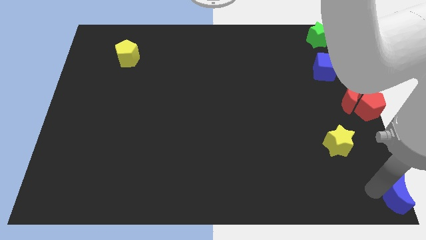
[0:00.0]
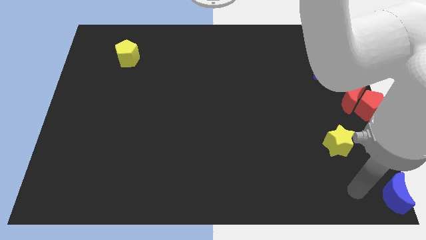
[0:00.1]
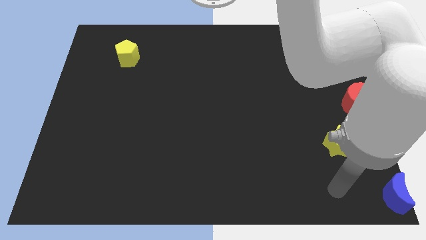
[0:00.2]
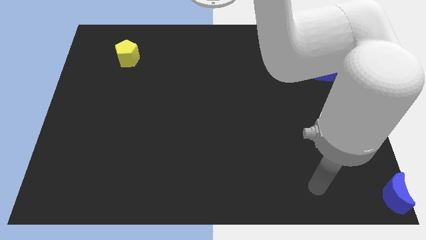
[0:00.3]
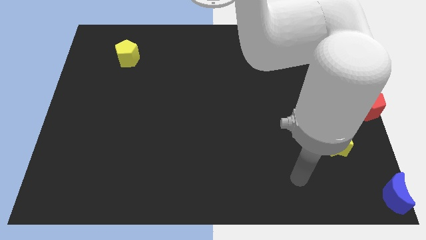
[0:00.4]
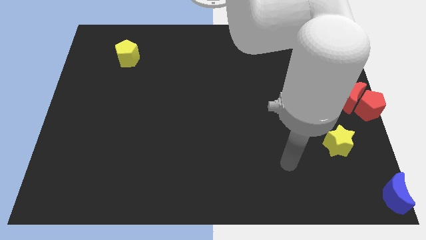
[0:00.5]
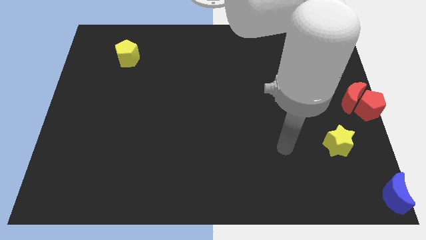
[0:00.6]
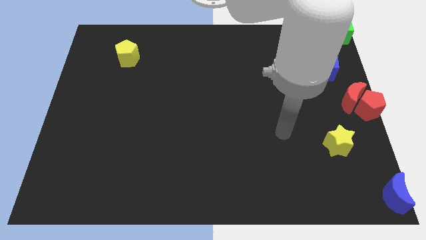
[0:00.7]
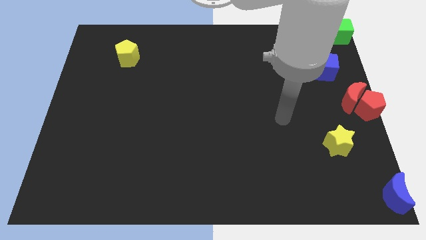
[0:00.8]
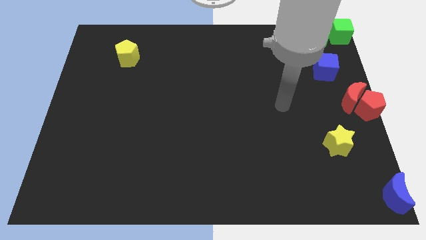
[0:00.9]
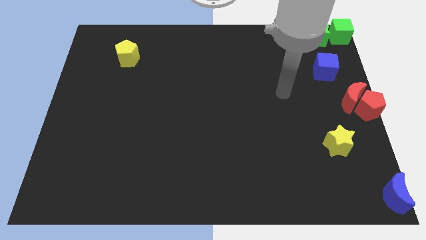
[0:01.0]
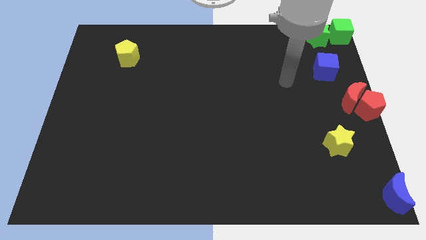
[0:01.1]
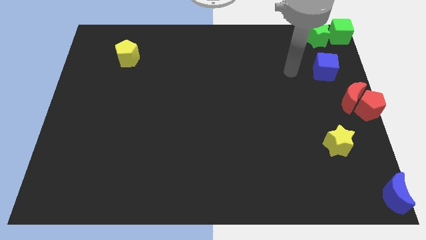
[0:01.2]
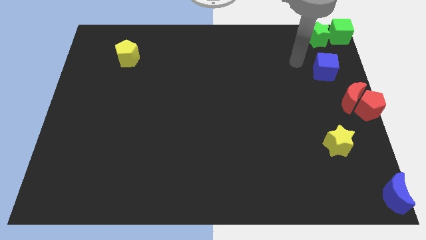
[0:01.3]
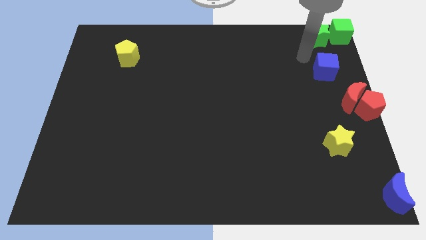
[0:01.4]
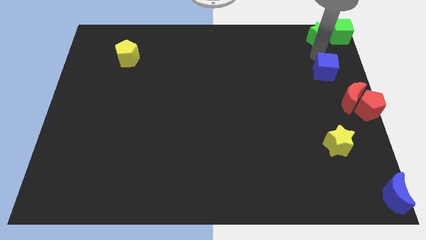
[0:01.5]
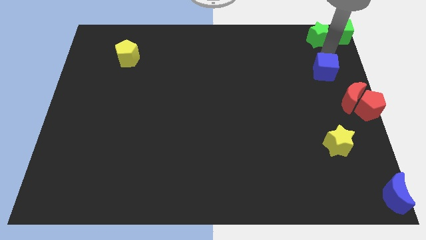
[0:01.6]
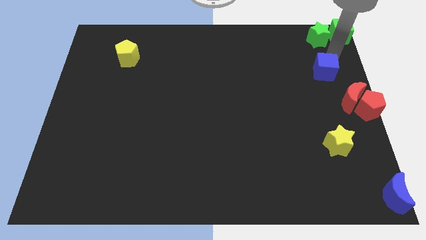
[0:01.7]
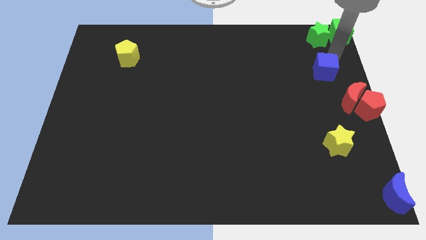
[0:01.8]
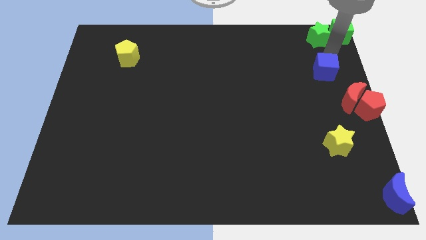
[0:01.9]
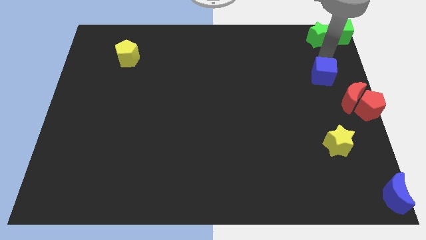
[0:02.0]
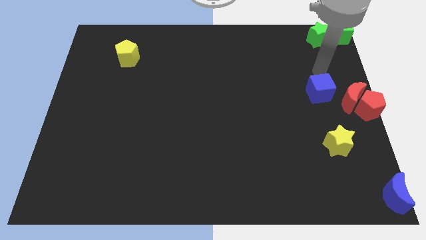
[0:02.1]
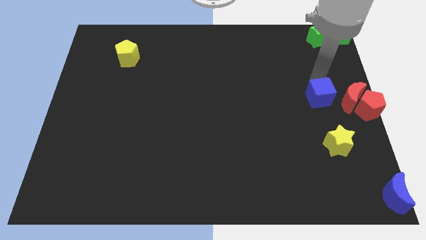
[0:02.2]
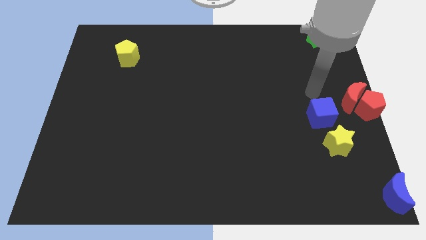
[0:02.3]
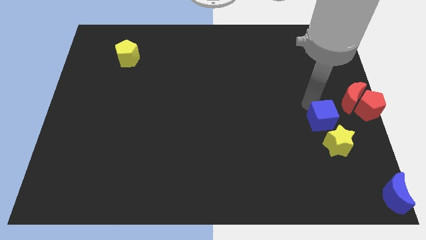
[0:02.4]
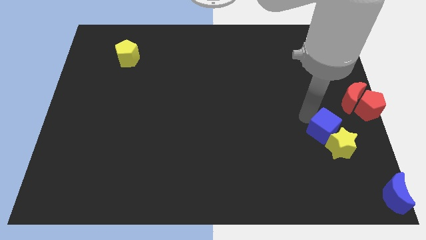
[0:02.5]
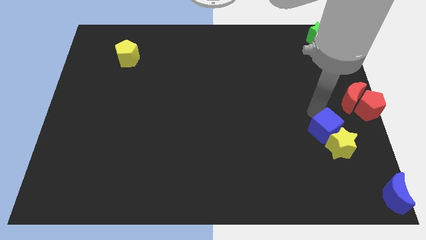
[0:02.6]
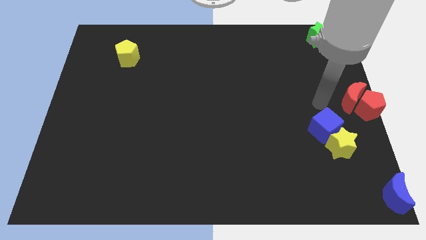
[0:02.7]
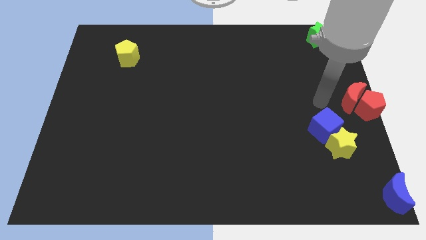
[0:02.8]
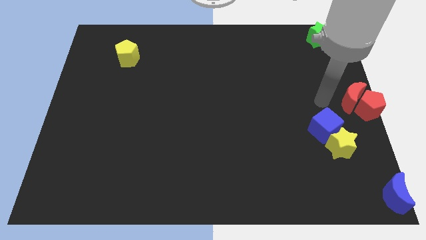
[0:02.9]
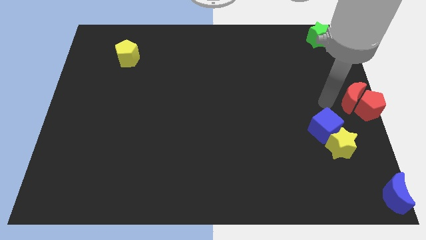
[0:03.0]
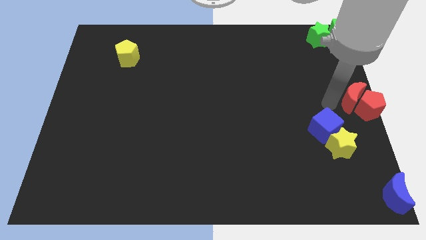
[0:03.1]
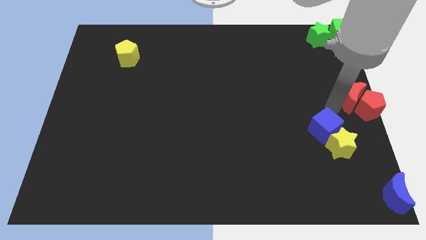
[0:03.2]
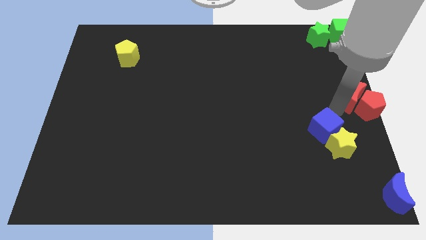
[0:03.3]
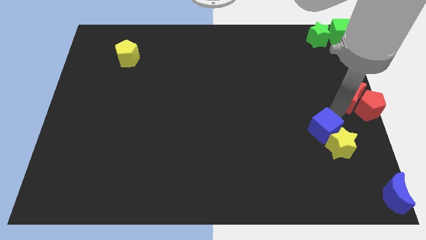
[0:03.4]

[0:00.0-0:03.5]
move the blue cube into the yellow star

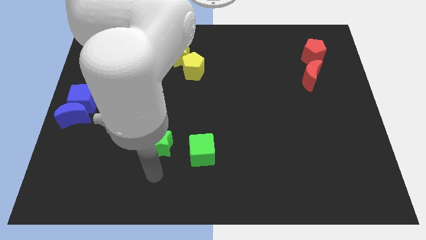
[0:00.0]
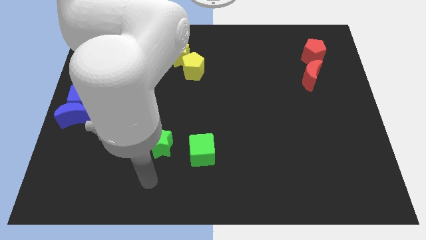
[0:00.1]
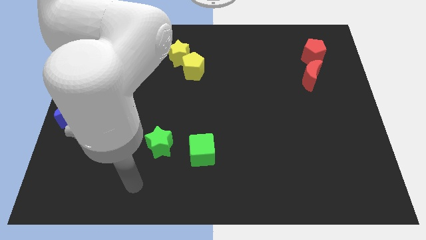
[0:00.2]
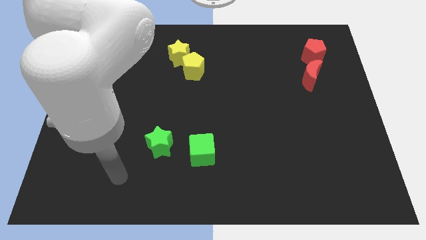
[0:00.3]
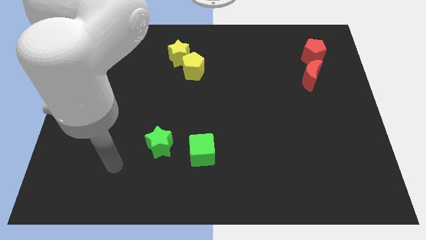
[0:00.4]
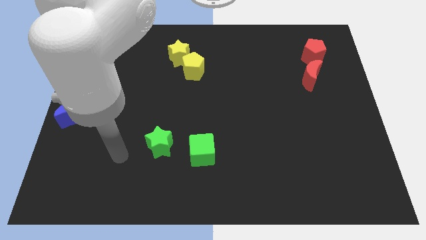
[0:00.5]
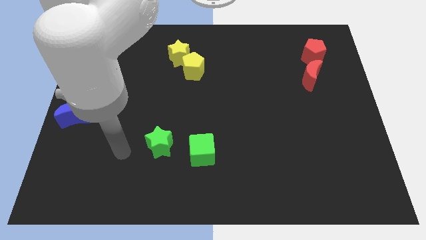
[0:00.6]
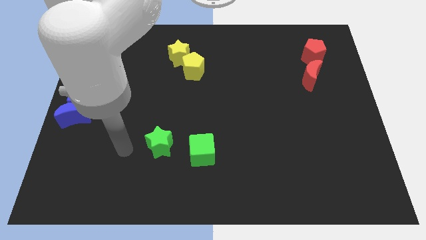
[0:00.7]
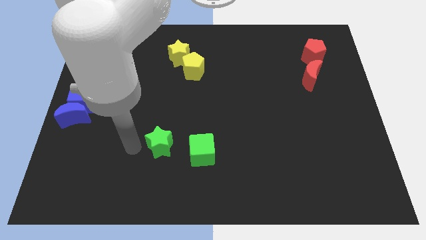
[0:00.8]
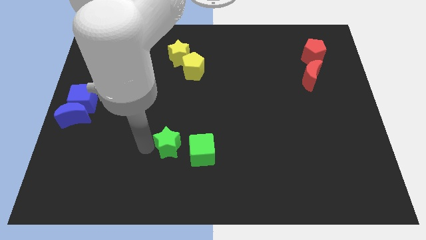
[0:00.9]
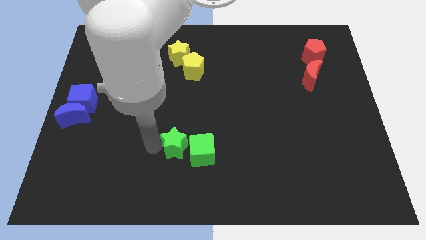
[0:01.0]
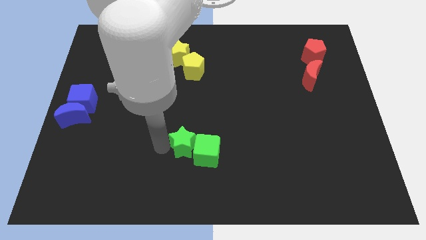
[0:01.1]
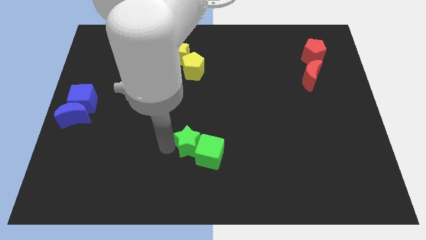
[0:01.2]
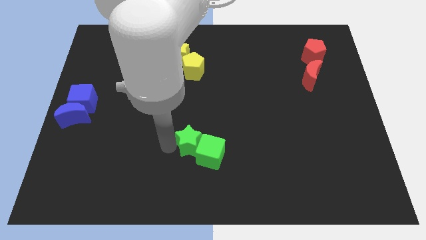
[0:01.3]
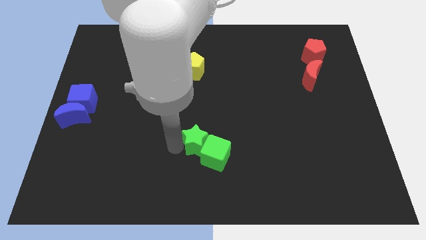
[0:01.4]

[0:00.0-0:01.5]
push green star into green cube

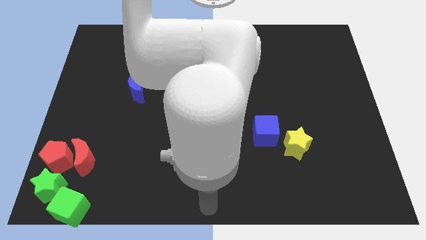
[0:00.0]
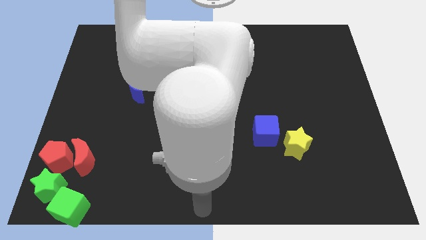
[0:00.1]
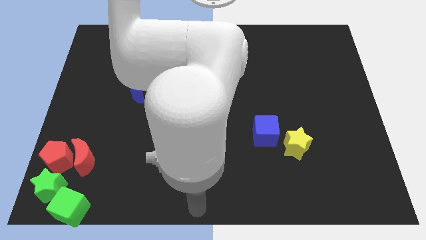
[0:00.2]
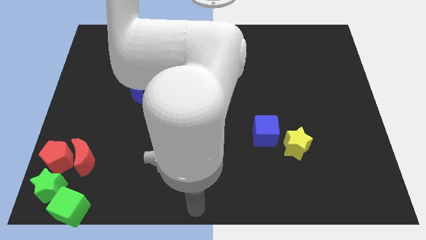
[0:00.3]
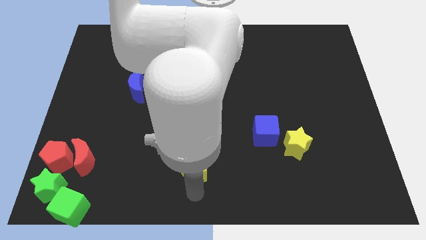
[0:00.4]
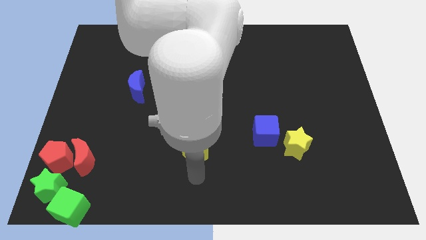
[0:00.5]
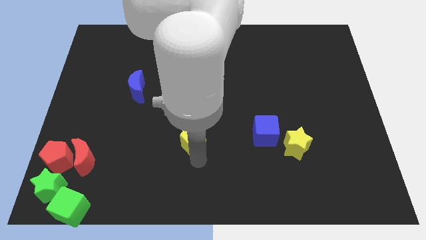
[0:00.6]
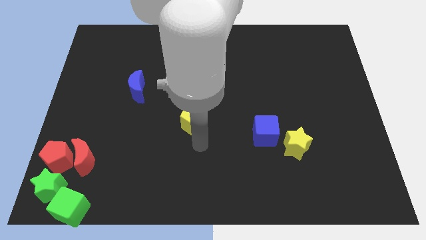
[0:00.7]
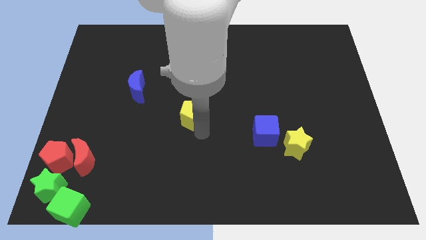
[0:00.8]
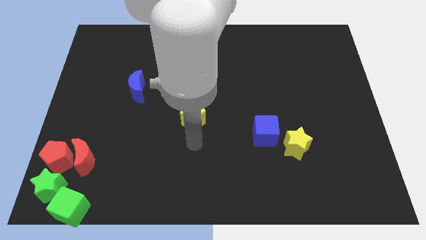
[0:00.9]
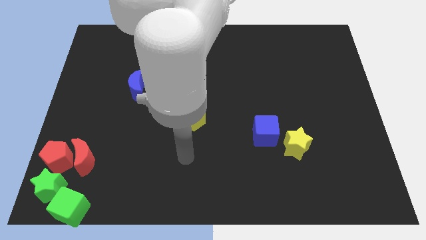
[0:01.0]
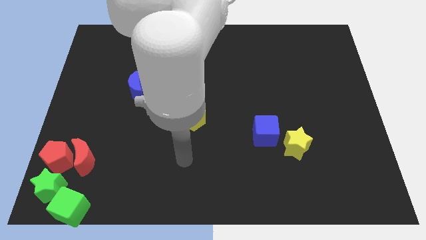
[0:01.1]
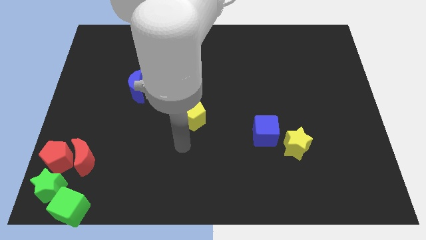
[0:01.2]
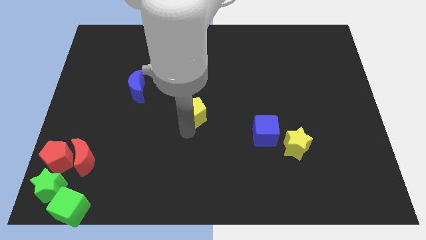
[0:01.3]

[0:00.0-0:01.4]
push the yellow pentagon to the center

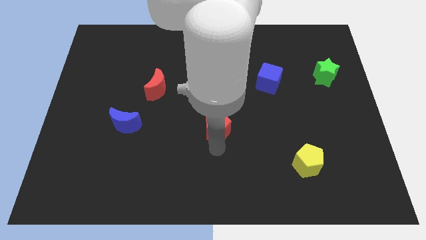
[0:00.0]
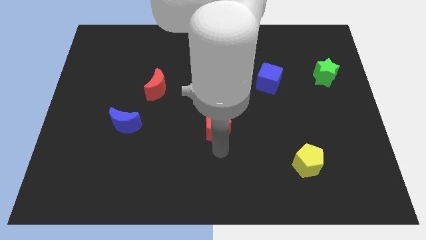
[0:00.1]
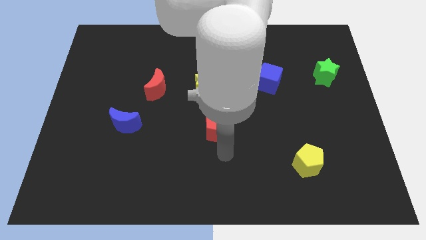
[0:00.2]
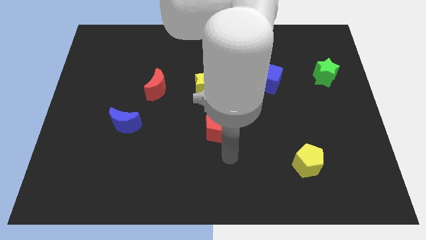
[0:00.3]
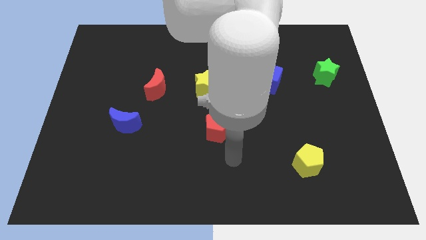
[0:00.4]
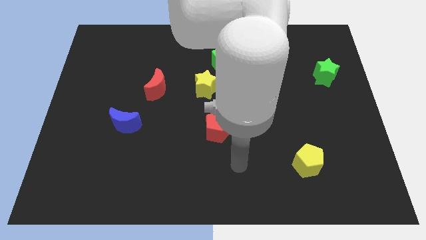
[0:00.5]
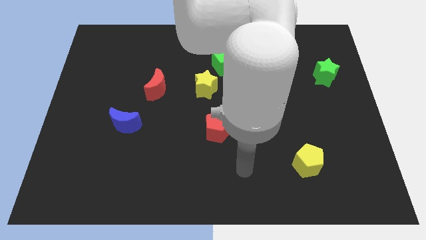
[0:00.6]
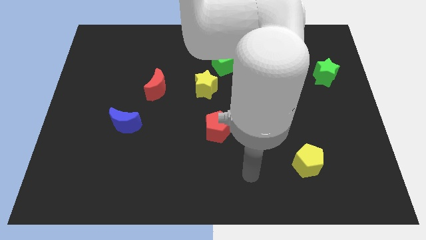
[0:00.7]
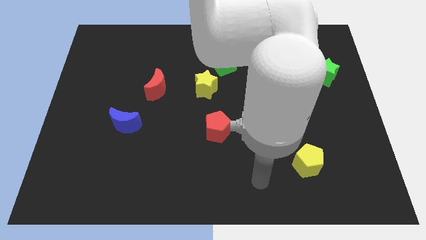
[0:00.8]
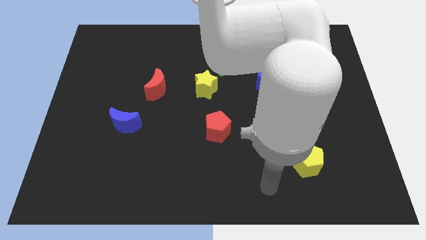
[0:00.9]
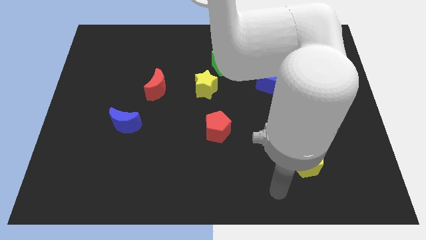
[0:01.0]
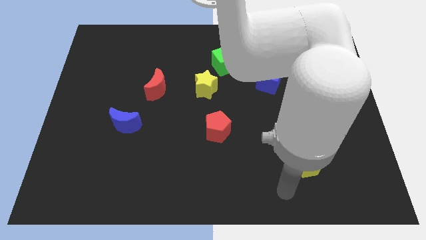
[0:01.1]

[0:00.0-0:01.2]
move the arm away from the red pentagon

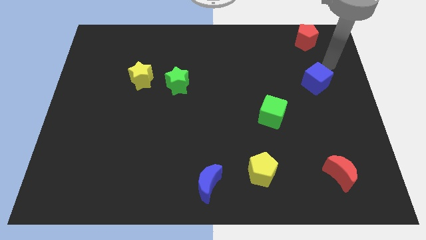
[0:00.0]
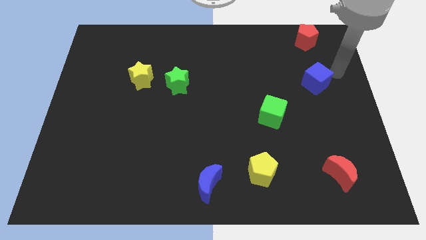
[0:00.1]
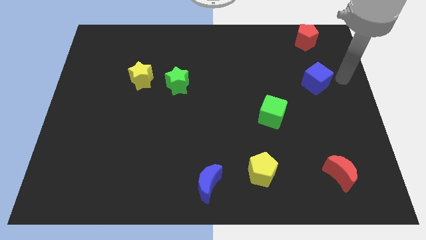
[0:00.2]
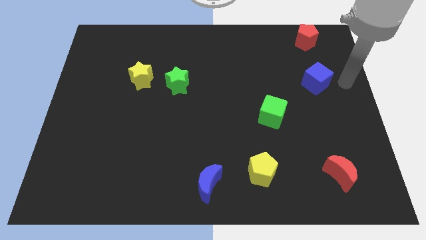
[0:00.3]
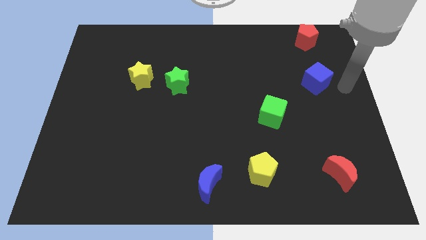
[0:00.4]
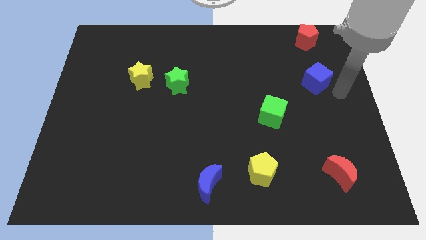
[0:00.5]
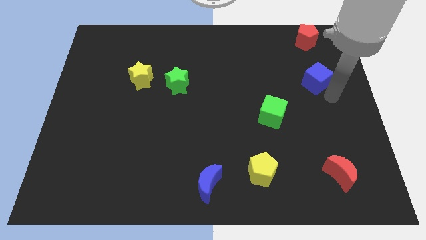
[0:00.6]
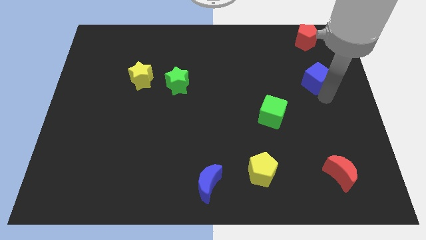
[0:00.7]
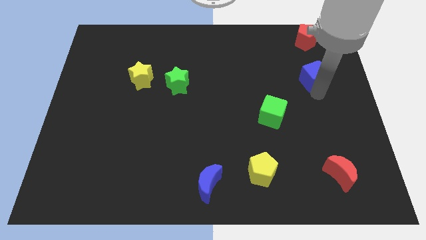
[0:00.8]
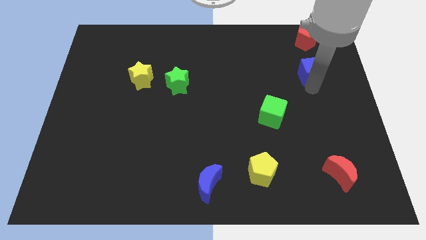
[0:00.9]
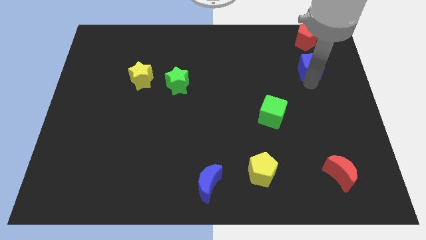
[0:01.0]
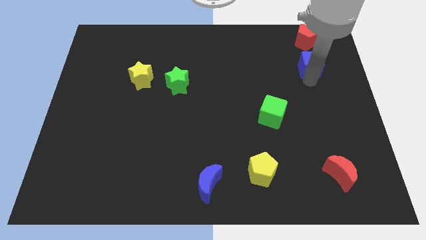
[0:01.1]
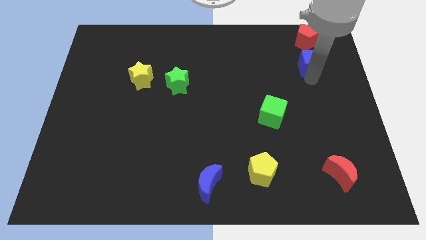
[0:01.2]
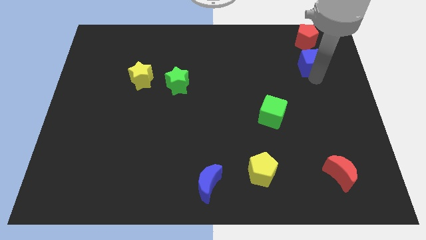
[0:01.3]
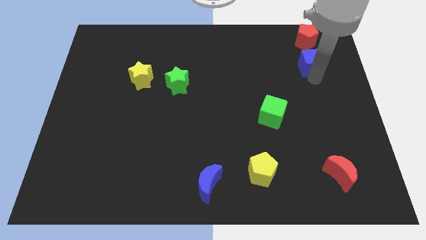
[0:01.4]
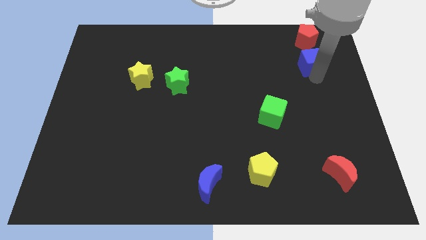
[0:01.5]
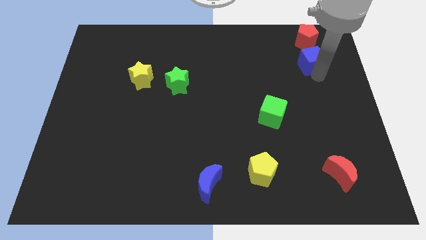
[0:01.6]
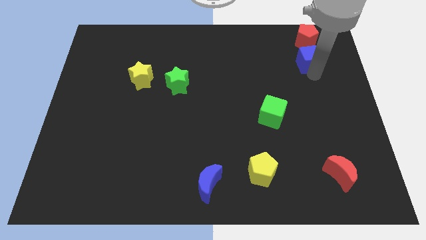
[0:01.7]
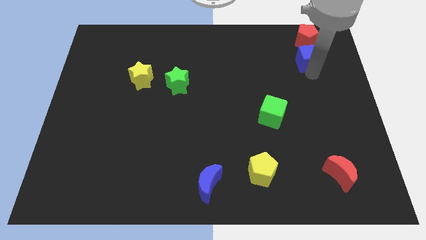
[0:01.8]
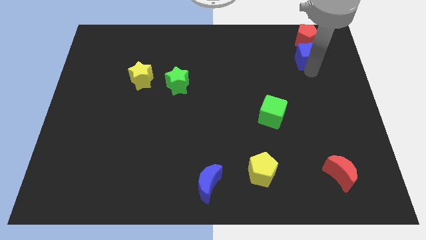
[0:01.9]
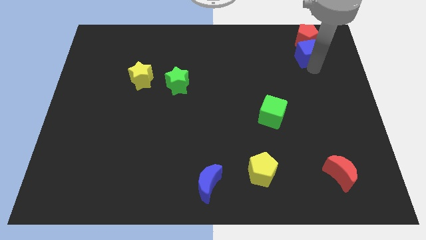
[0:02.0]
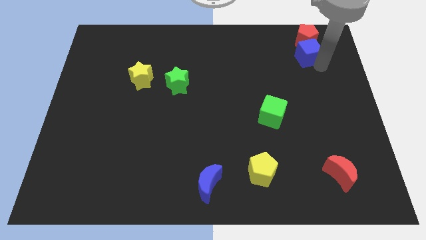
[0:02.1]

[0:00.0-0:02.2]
move blue cube to the bottom of red pentagon
